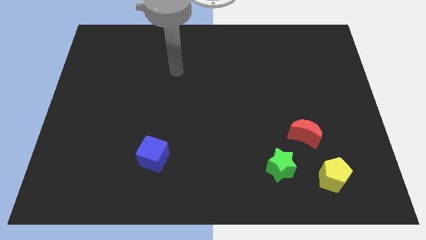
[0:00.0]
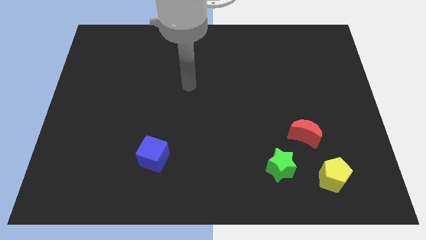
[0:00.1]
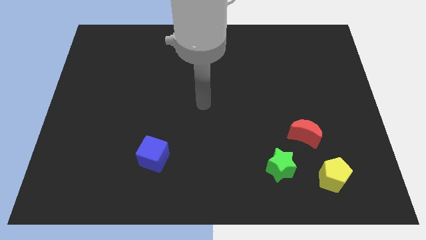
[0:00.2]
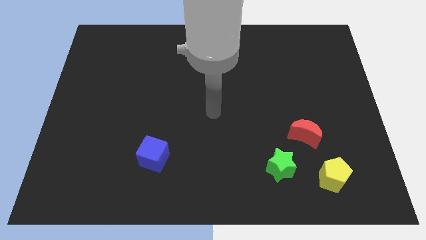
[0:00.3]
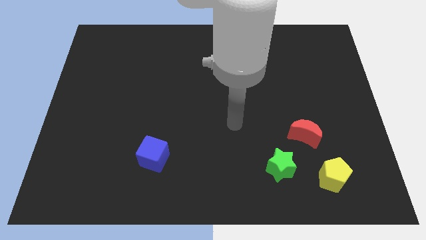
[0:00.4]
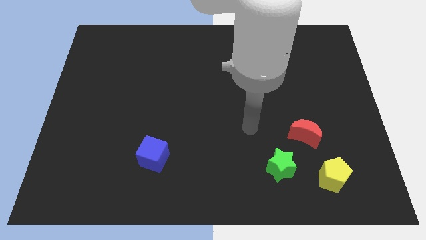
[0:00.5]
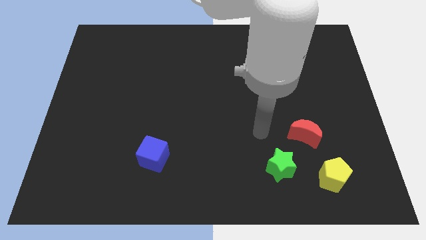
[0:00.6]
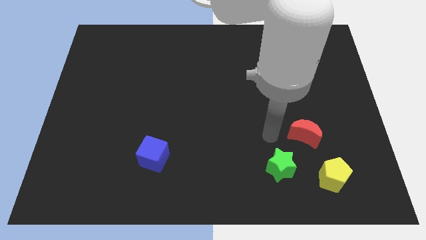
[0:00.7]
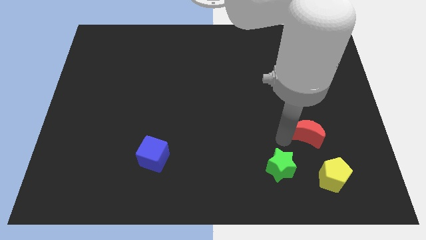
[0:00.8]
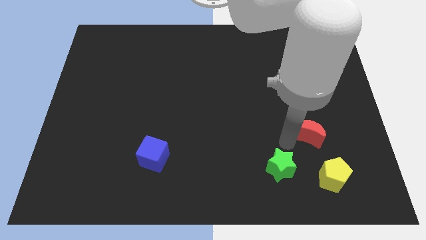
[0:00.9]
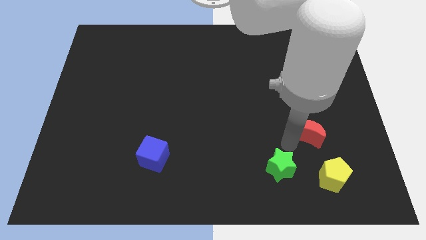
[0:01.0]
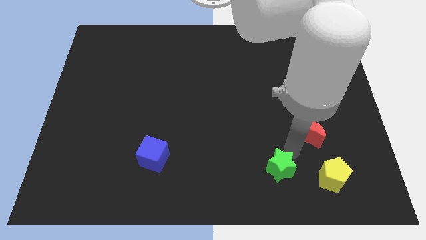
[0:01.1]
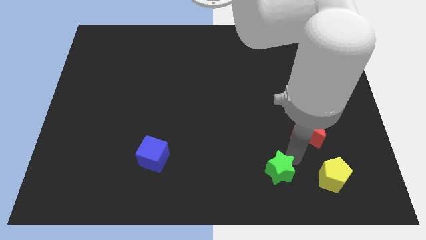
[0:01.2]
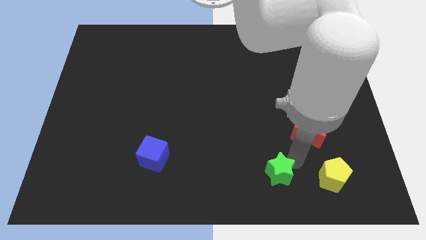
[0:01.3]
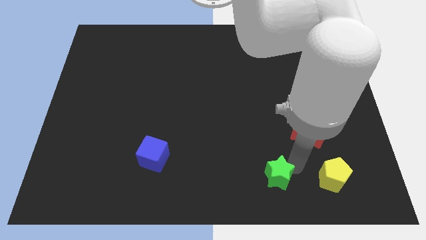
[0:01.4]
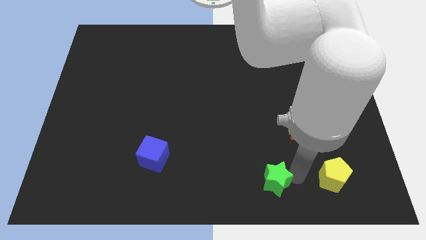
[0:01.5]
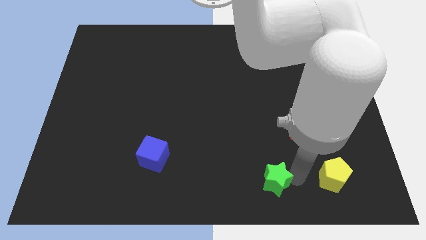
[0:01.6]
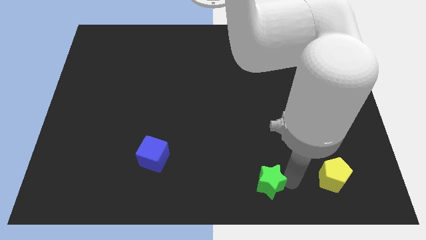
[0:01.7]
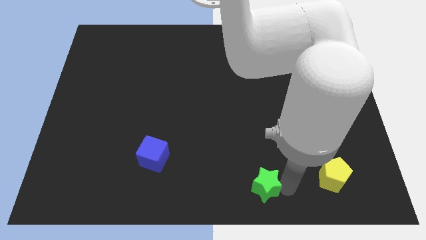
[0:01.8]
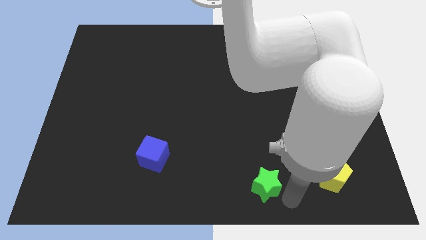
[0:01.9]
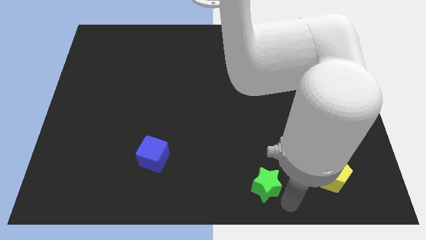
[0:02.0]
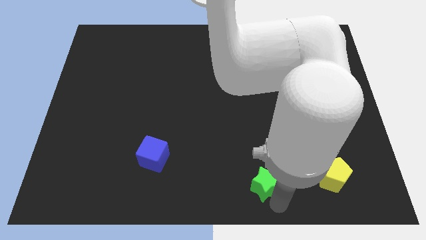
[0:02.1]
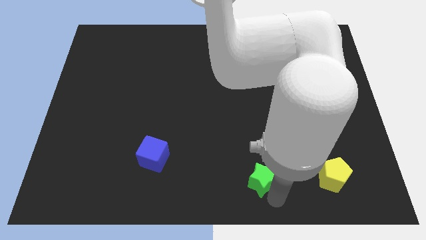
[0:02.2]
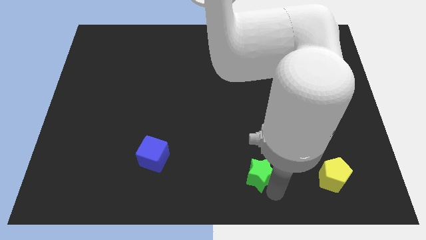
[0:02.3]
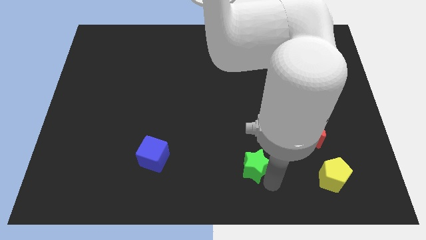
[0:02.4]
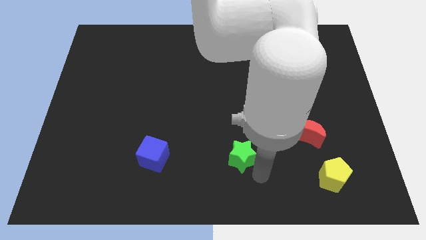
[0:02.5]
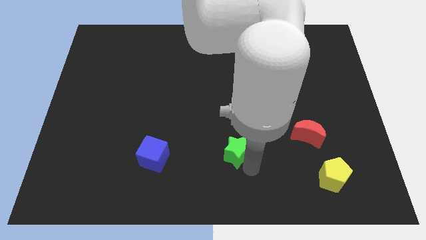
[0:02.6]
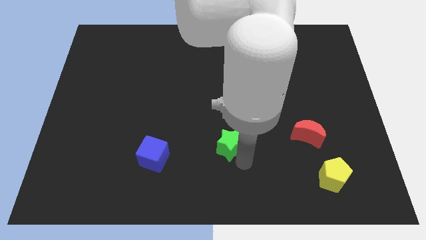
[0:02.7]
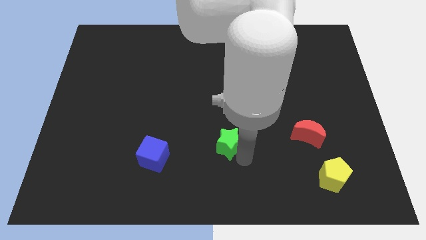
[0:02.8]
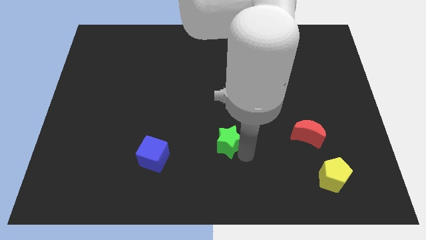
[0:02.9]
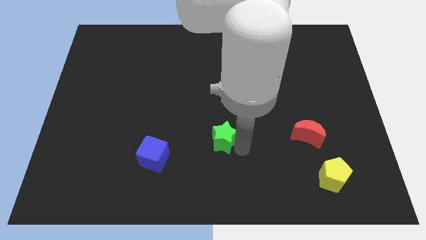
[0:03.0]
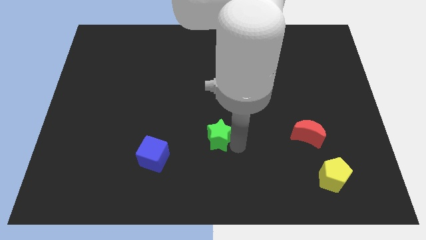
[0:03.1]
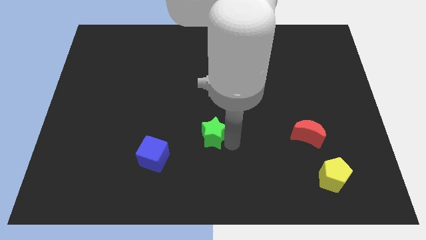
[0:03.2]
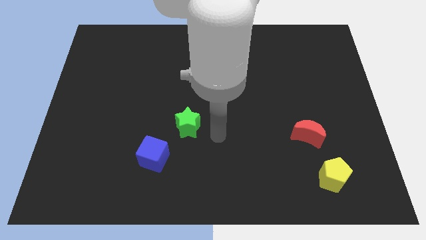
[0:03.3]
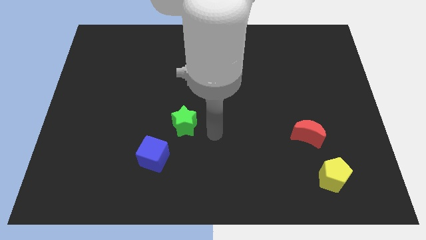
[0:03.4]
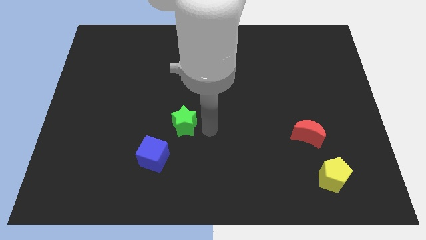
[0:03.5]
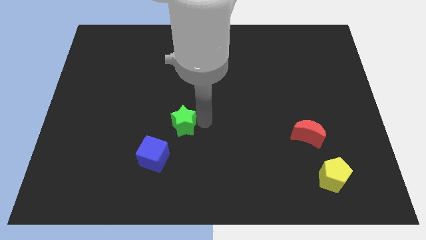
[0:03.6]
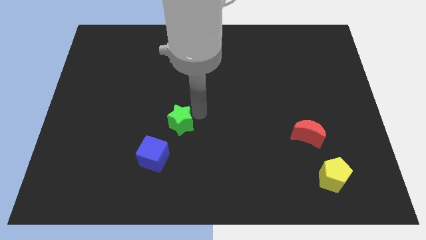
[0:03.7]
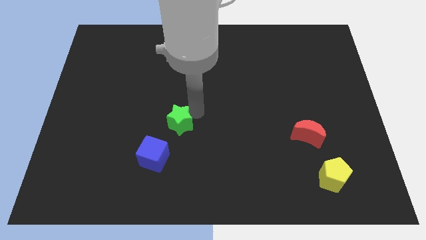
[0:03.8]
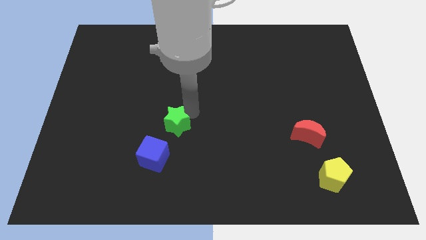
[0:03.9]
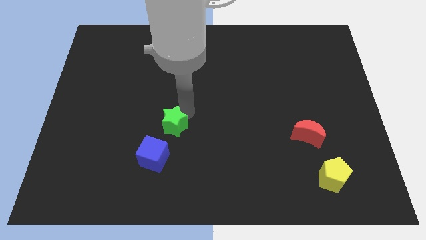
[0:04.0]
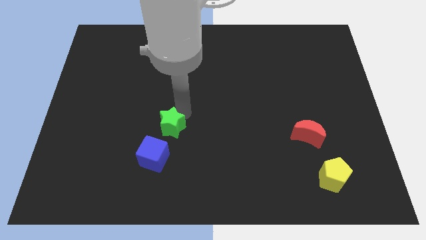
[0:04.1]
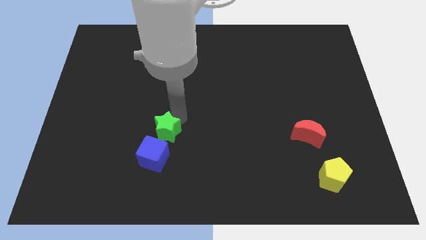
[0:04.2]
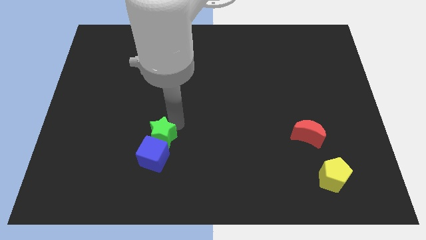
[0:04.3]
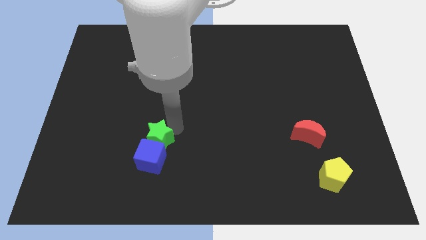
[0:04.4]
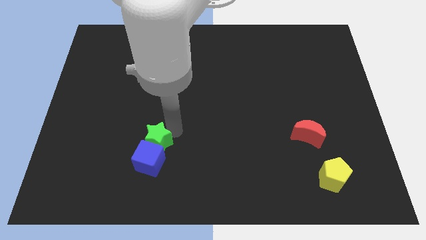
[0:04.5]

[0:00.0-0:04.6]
slide the star towards the blue block

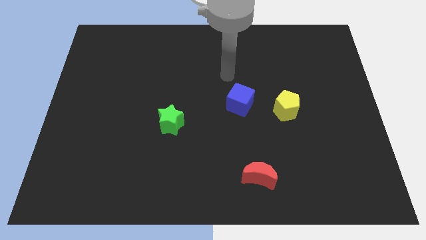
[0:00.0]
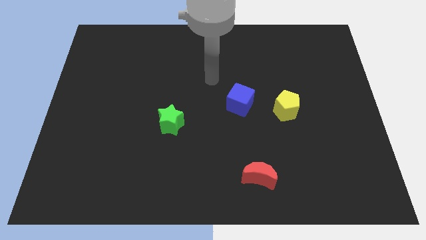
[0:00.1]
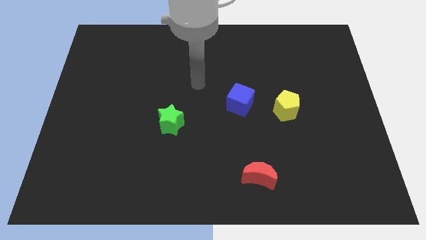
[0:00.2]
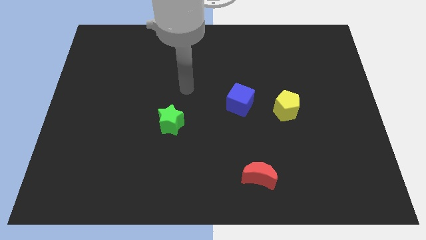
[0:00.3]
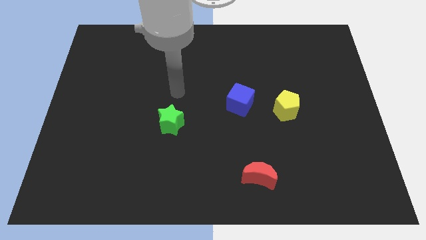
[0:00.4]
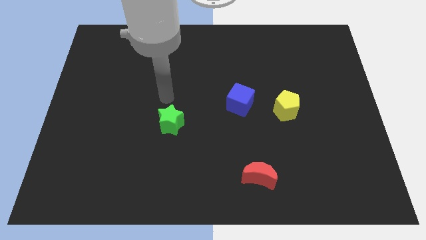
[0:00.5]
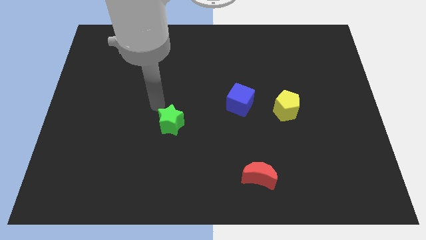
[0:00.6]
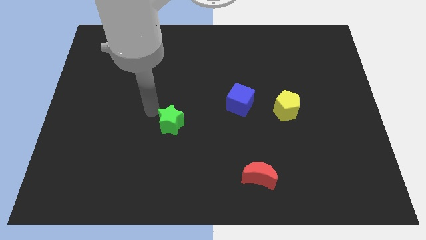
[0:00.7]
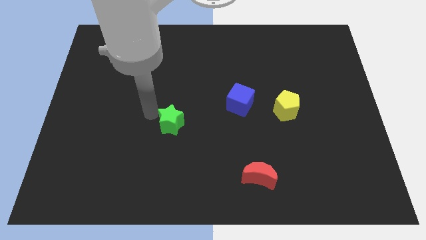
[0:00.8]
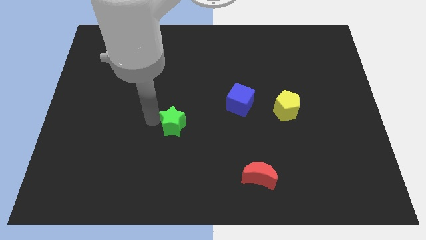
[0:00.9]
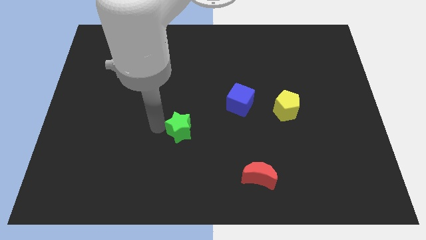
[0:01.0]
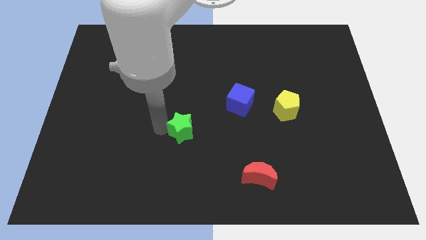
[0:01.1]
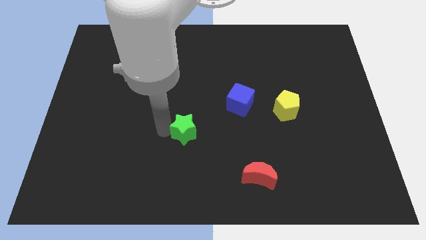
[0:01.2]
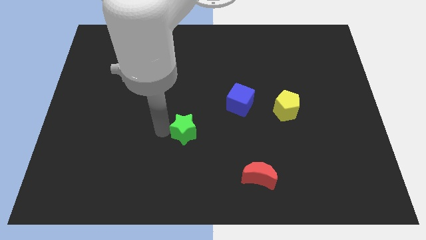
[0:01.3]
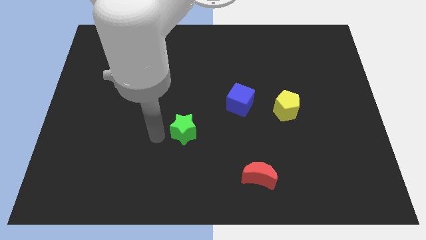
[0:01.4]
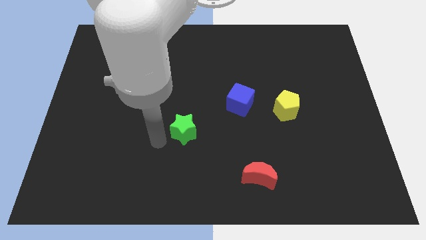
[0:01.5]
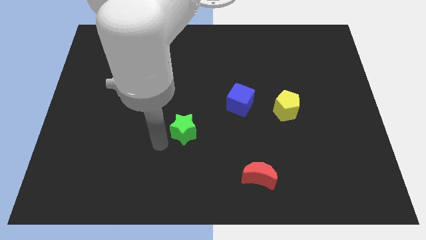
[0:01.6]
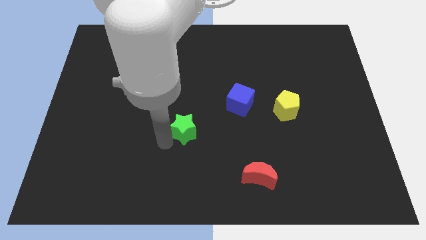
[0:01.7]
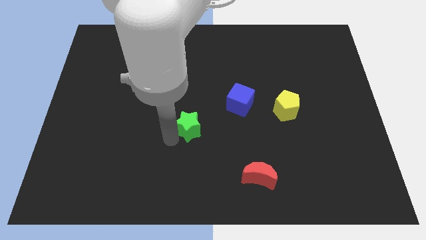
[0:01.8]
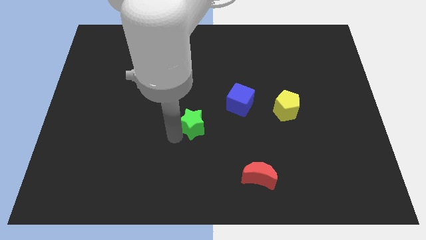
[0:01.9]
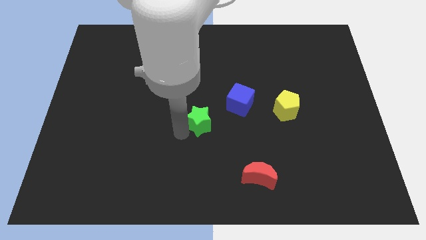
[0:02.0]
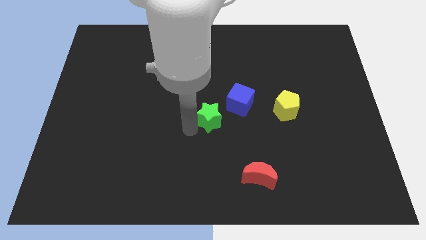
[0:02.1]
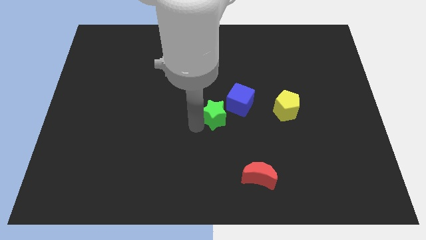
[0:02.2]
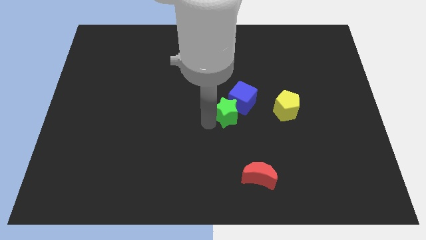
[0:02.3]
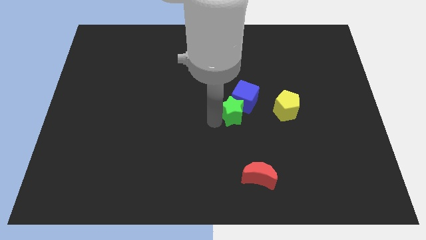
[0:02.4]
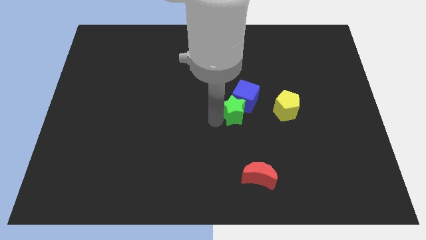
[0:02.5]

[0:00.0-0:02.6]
slide the star towards the cube

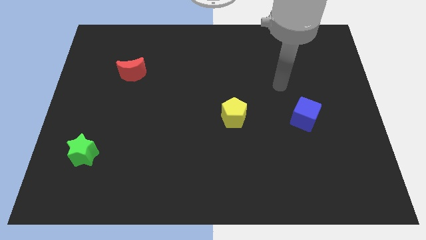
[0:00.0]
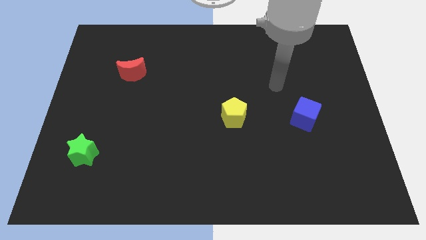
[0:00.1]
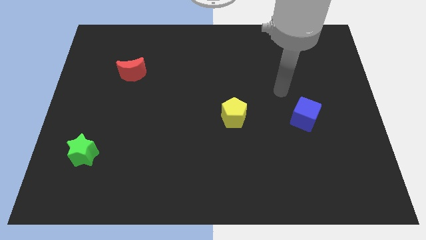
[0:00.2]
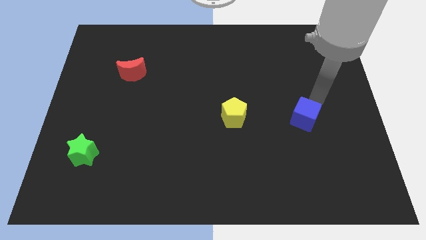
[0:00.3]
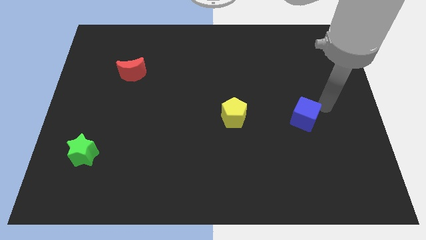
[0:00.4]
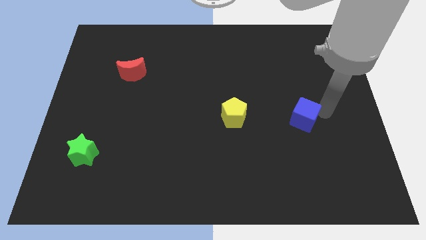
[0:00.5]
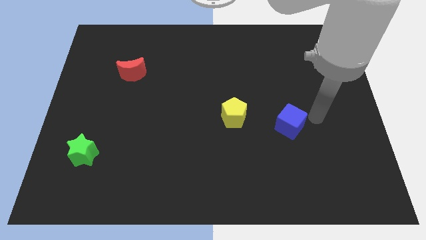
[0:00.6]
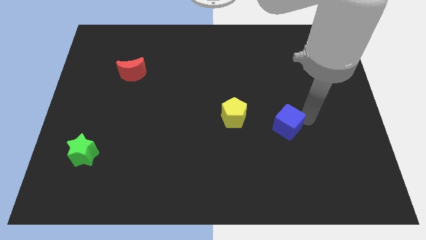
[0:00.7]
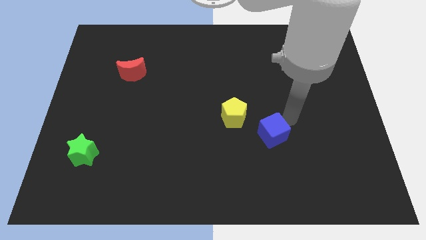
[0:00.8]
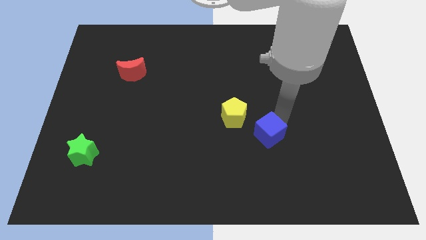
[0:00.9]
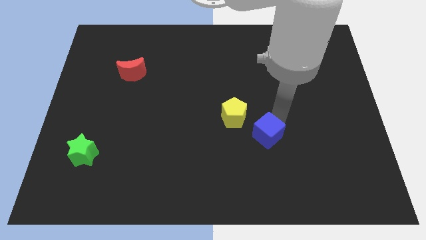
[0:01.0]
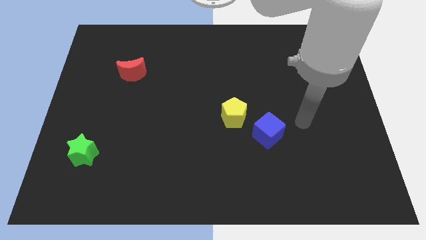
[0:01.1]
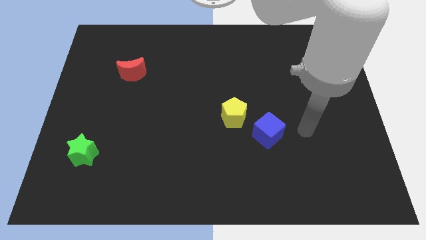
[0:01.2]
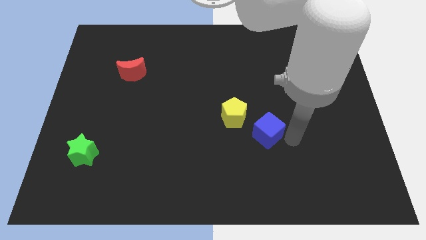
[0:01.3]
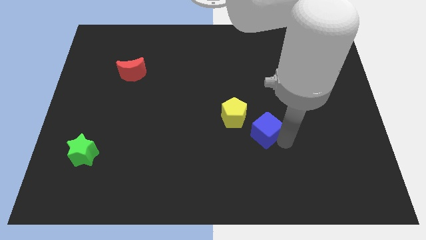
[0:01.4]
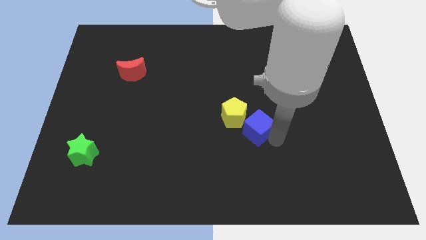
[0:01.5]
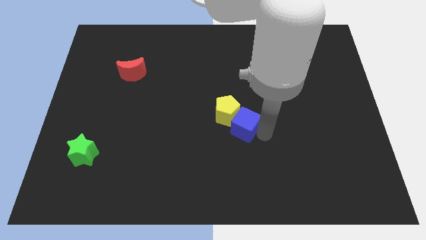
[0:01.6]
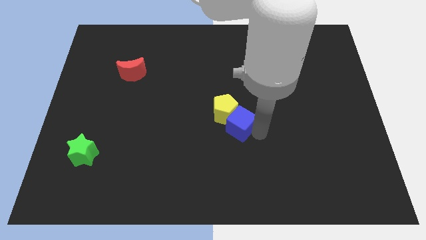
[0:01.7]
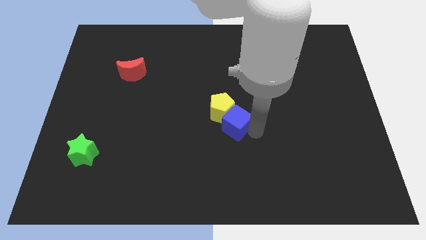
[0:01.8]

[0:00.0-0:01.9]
push the blue block close to the pentagon
